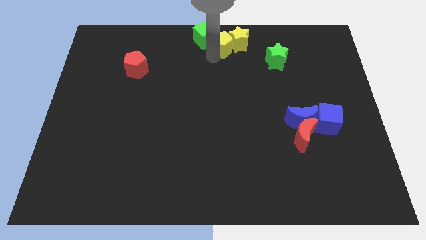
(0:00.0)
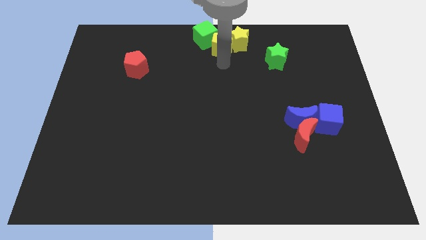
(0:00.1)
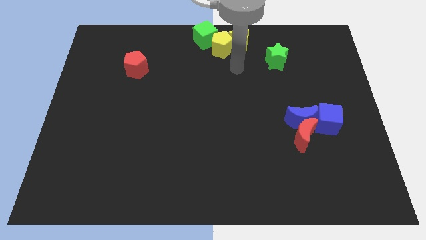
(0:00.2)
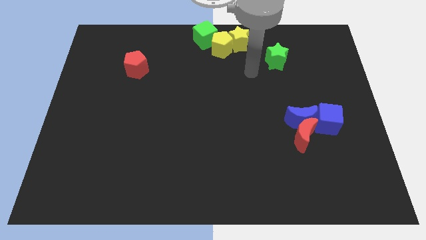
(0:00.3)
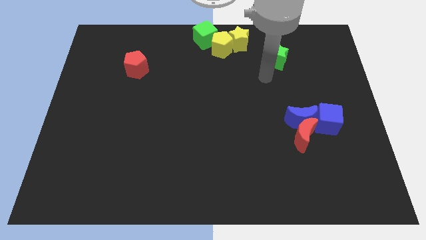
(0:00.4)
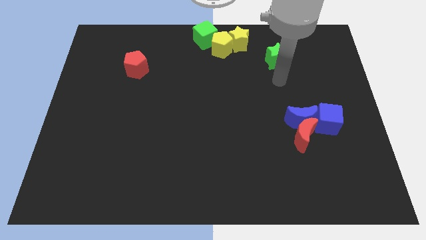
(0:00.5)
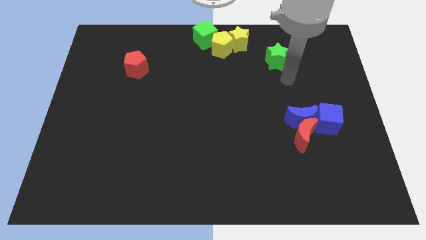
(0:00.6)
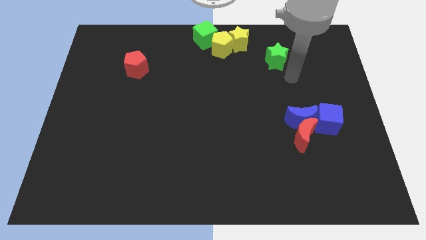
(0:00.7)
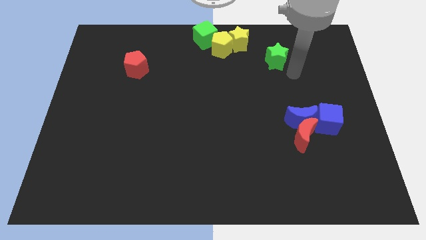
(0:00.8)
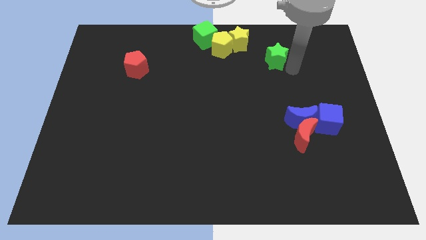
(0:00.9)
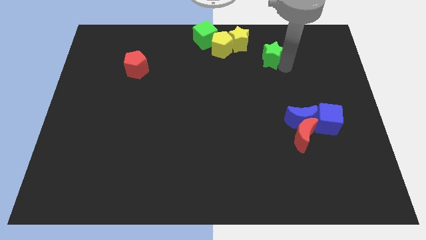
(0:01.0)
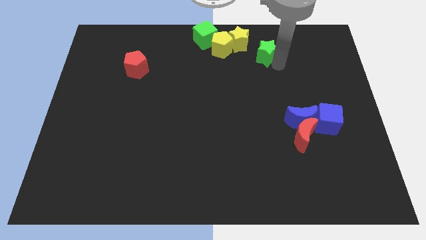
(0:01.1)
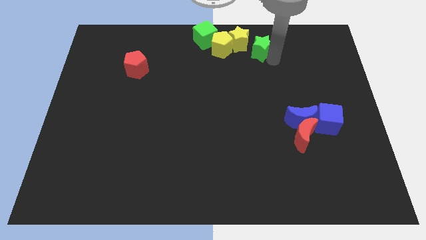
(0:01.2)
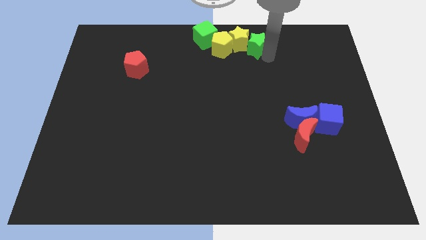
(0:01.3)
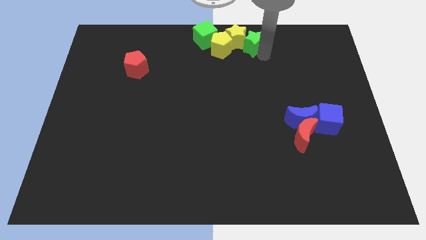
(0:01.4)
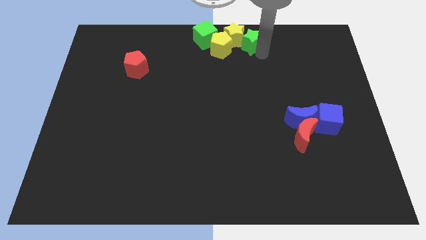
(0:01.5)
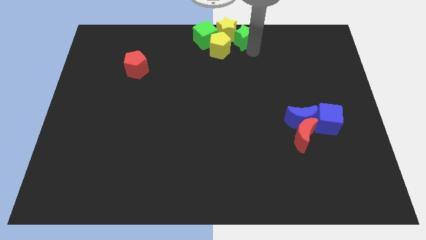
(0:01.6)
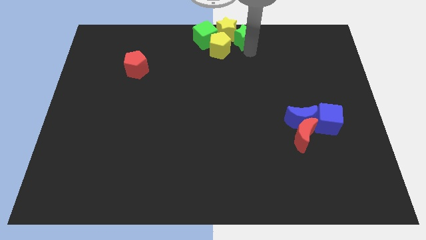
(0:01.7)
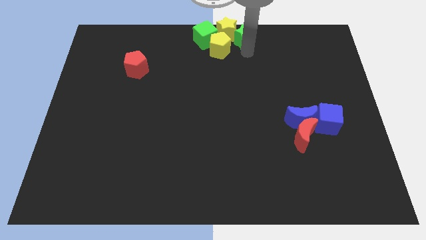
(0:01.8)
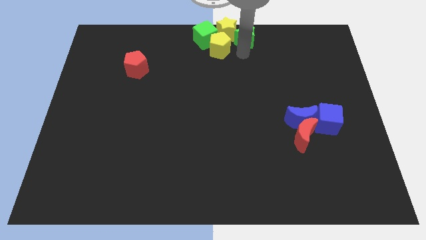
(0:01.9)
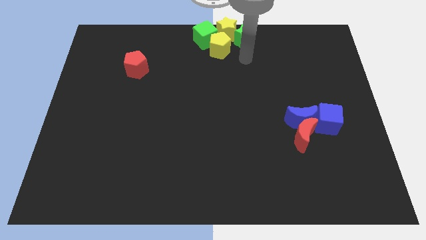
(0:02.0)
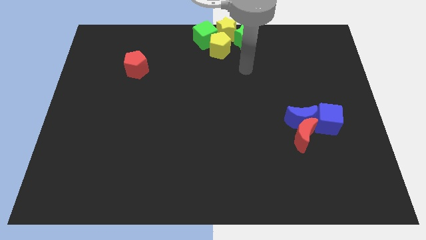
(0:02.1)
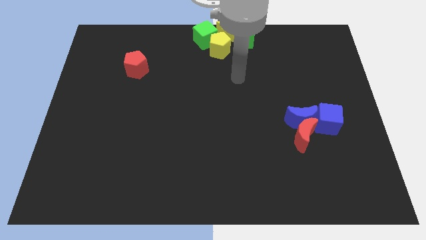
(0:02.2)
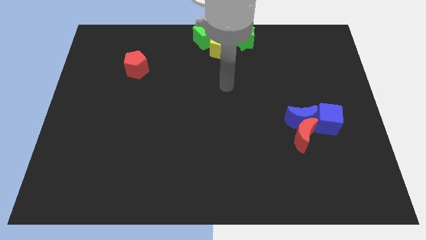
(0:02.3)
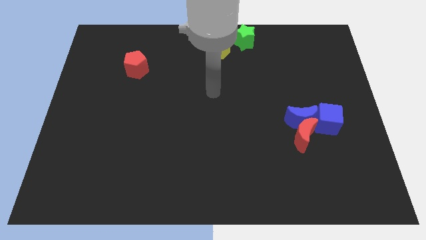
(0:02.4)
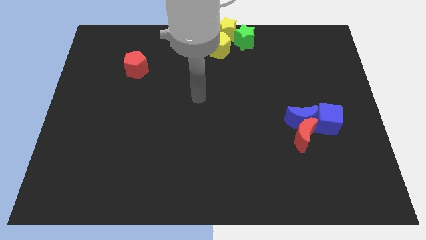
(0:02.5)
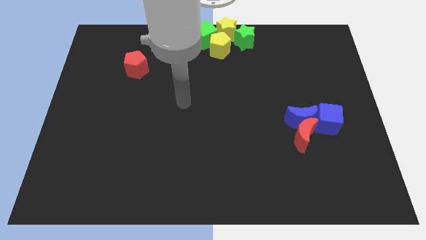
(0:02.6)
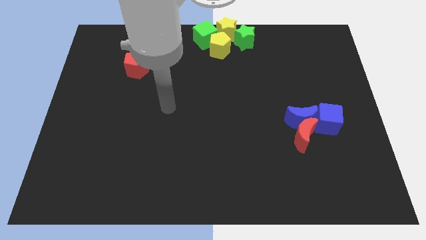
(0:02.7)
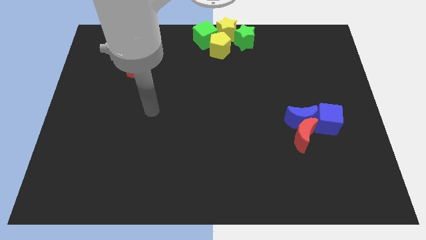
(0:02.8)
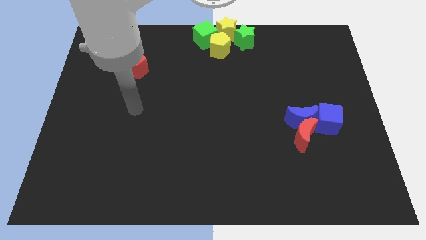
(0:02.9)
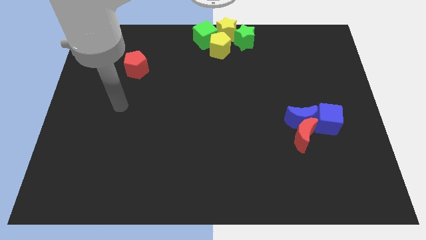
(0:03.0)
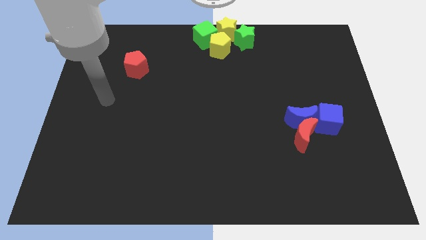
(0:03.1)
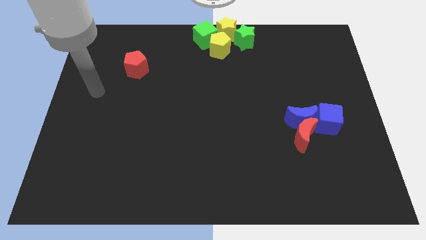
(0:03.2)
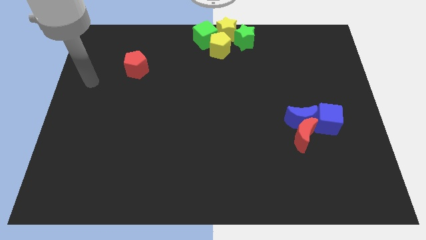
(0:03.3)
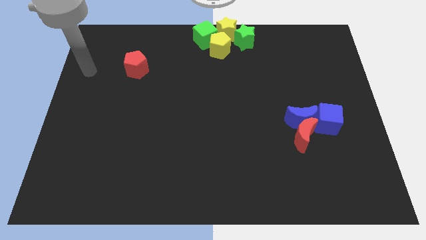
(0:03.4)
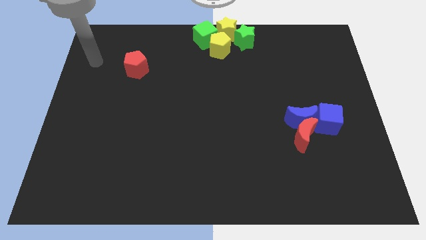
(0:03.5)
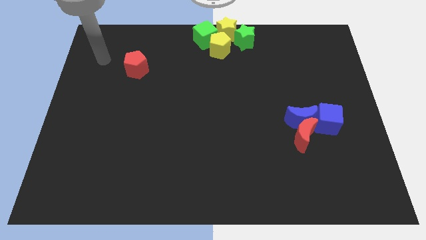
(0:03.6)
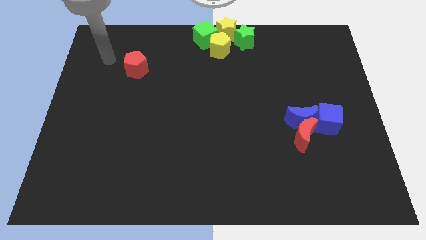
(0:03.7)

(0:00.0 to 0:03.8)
push the green star into the yellow star

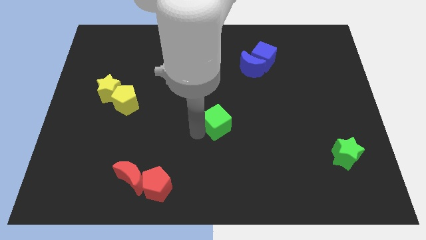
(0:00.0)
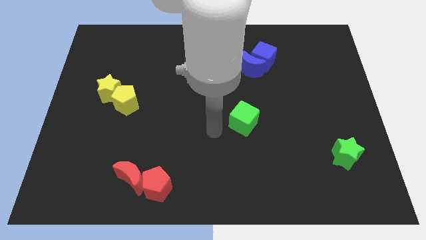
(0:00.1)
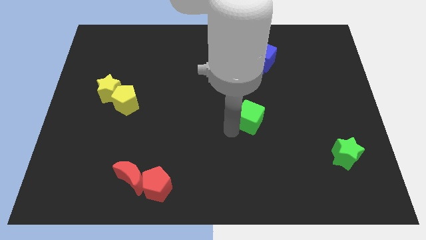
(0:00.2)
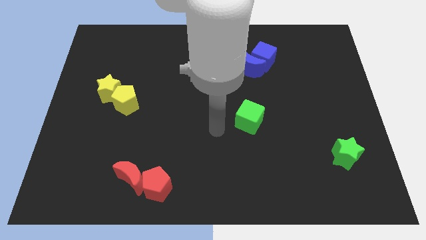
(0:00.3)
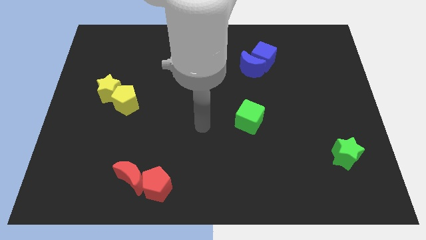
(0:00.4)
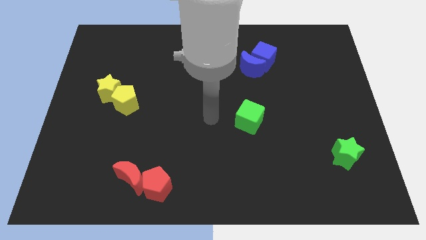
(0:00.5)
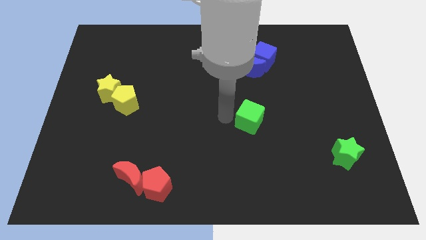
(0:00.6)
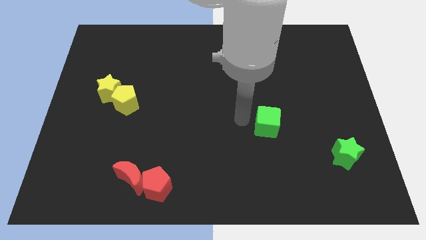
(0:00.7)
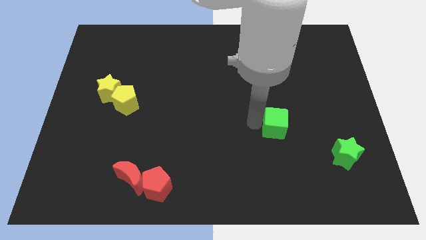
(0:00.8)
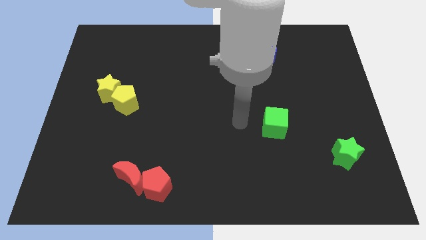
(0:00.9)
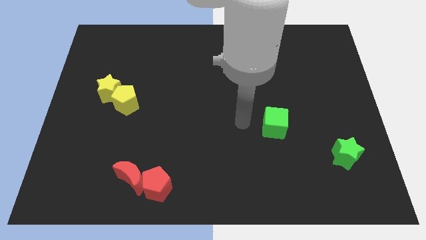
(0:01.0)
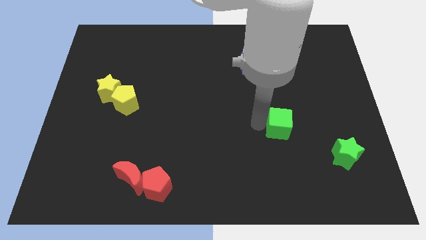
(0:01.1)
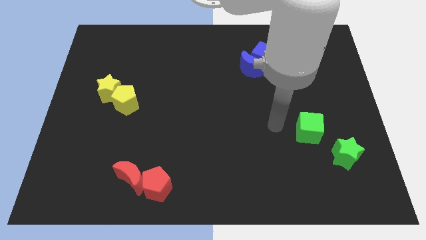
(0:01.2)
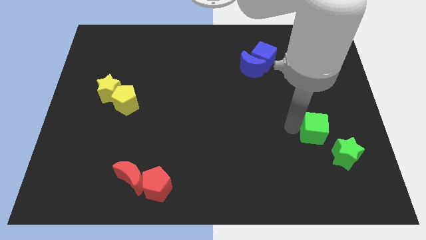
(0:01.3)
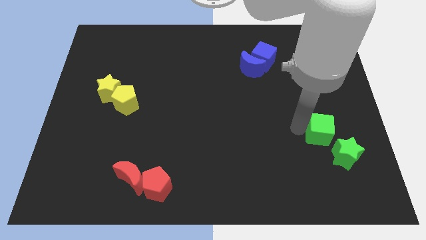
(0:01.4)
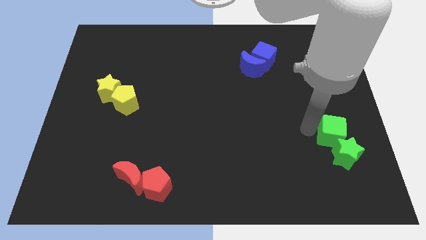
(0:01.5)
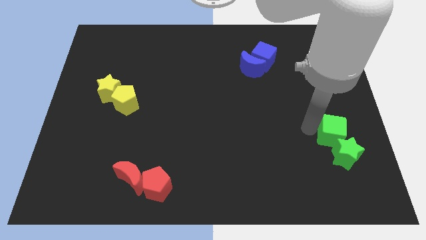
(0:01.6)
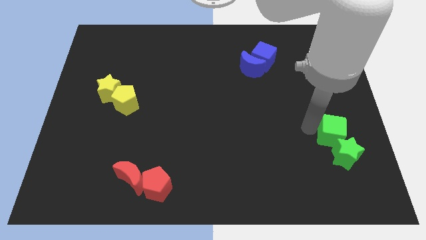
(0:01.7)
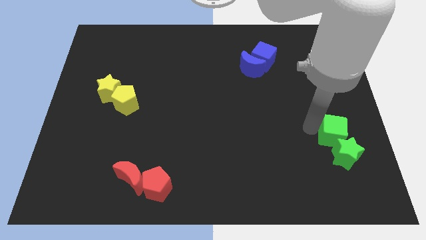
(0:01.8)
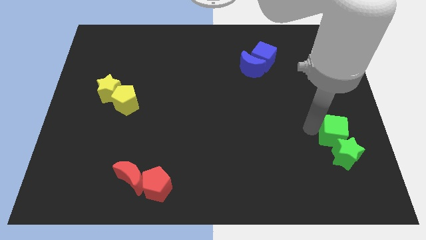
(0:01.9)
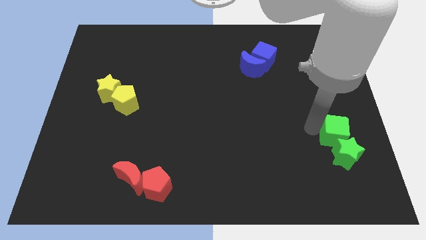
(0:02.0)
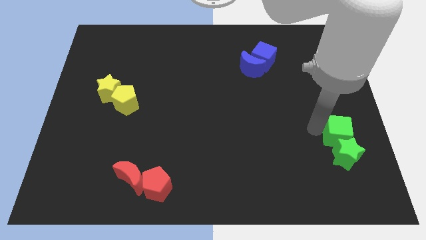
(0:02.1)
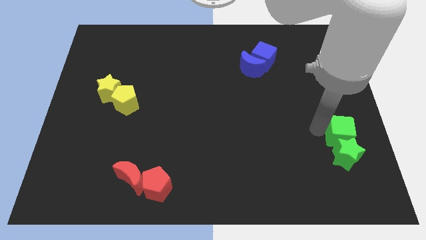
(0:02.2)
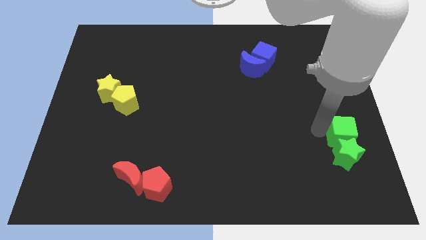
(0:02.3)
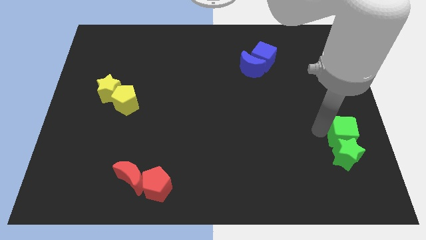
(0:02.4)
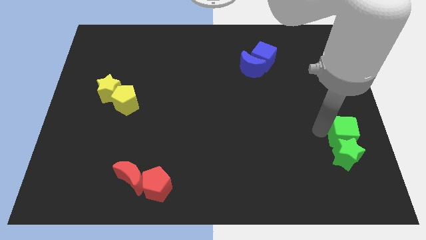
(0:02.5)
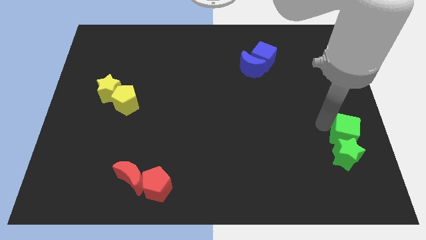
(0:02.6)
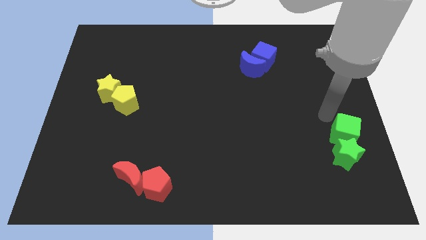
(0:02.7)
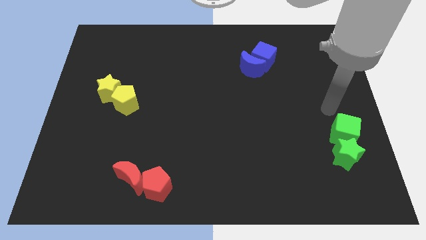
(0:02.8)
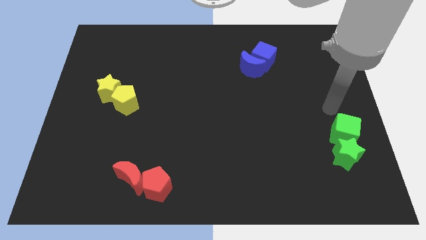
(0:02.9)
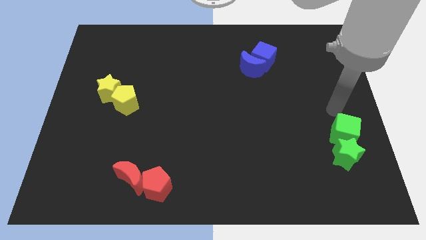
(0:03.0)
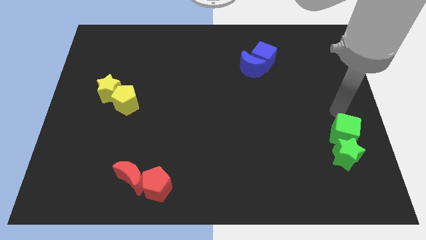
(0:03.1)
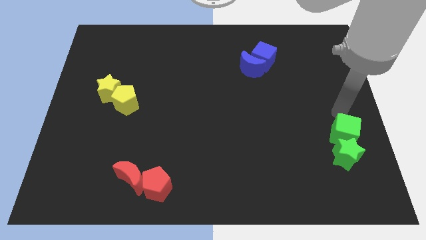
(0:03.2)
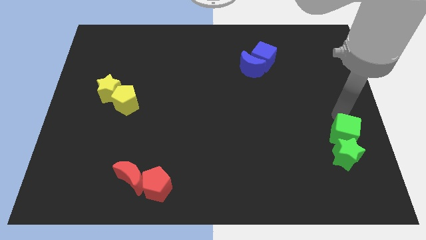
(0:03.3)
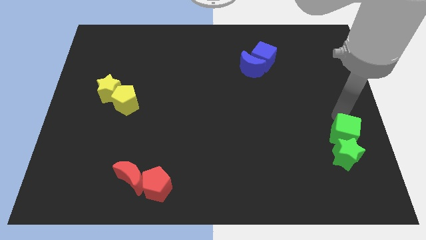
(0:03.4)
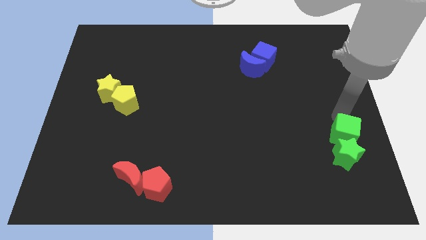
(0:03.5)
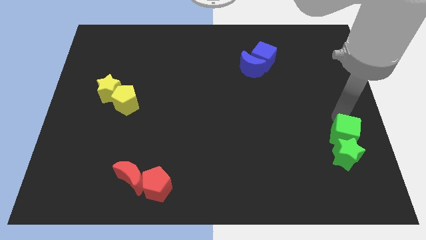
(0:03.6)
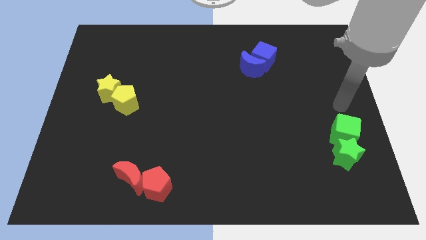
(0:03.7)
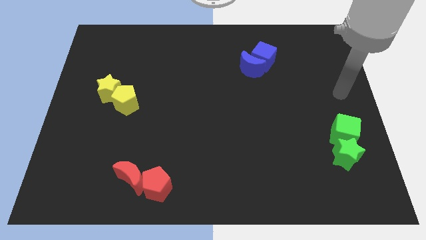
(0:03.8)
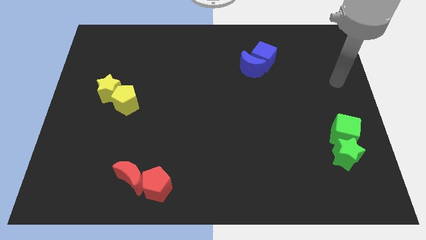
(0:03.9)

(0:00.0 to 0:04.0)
push the green cube at the top of the green star

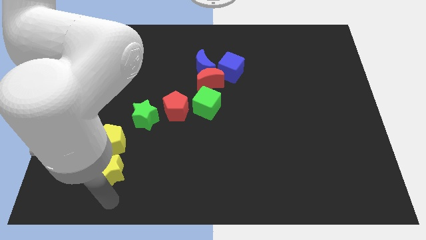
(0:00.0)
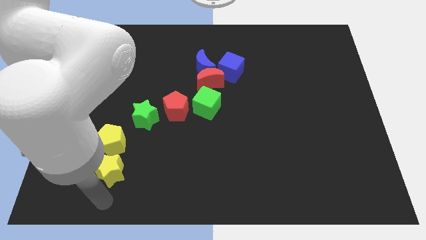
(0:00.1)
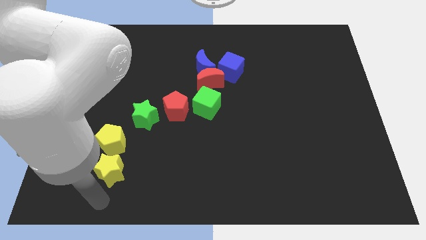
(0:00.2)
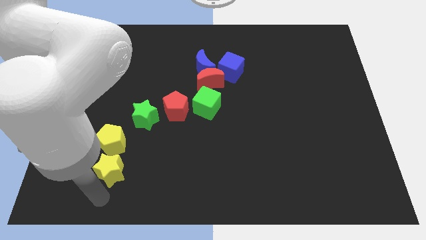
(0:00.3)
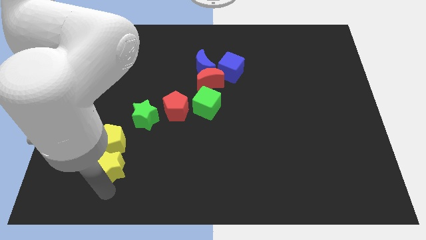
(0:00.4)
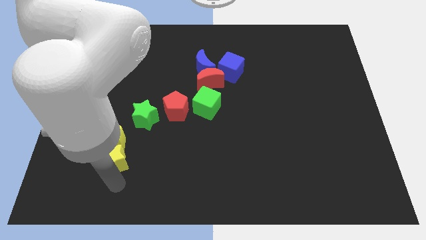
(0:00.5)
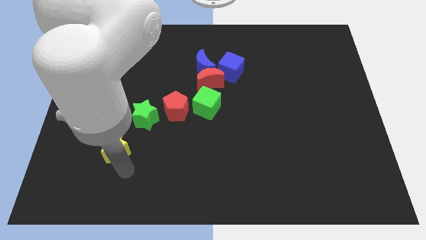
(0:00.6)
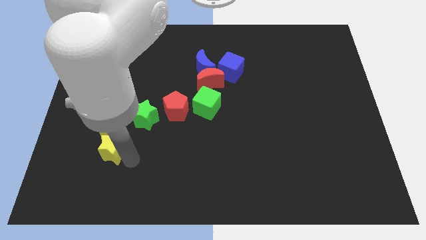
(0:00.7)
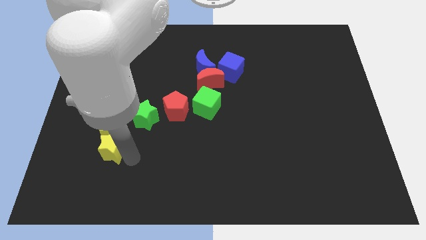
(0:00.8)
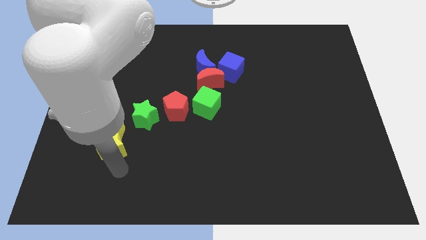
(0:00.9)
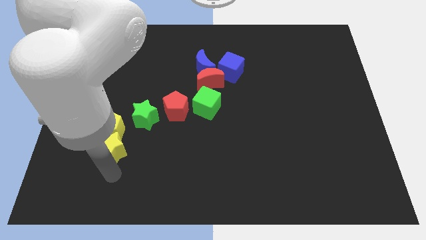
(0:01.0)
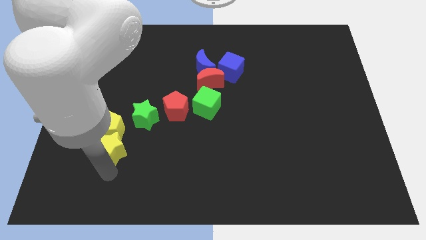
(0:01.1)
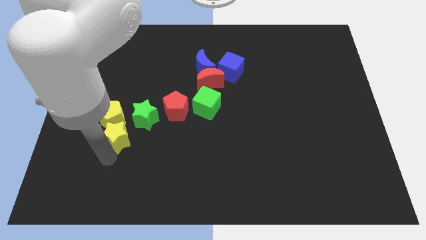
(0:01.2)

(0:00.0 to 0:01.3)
push the yellow star into the yellow pentagon
